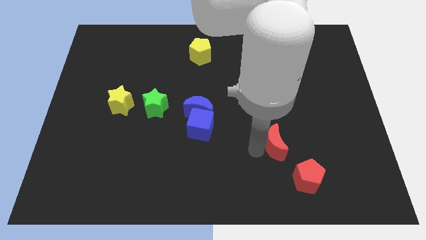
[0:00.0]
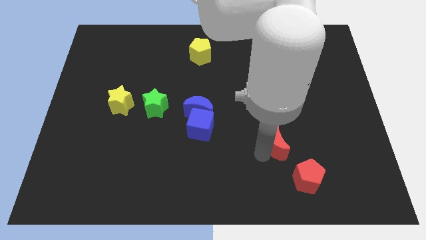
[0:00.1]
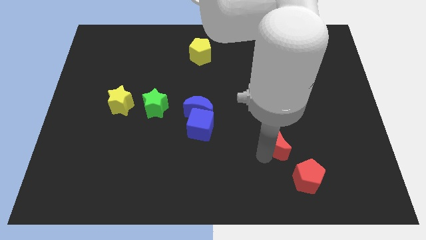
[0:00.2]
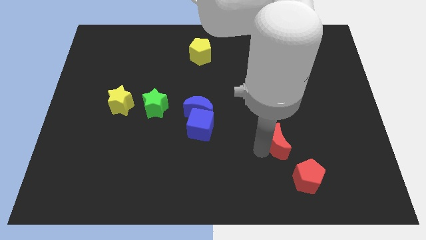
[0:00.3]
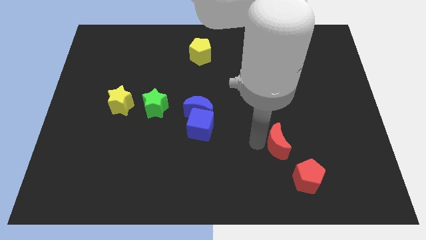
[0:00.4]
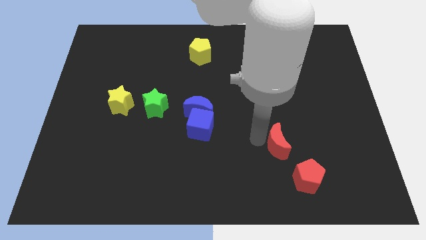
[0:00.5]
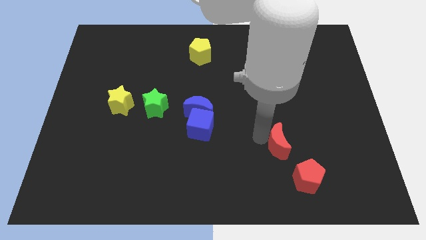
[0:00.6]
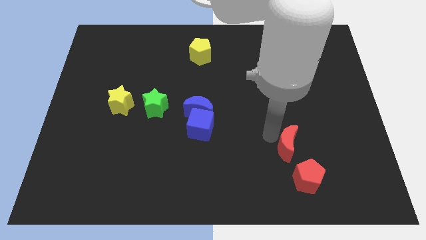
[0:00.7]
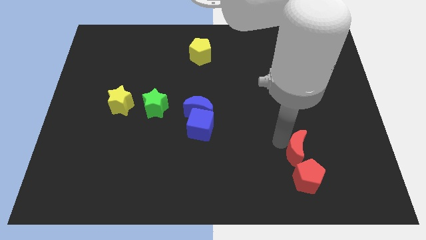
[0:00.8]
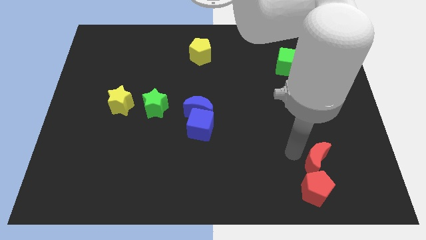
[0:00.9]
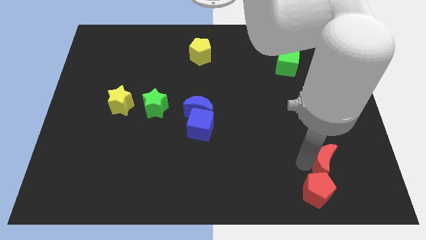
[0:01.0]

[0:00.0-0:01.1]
push the red moon into the top side of the red pentagon

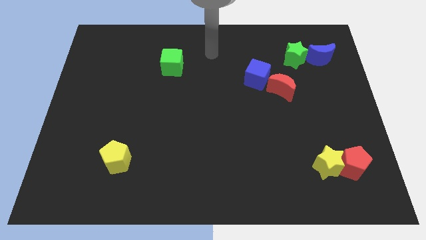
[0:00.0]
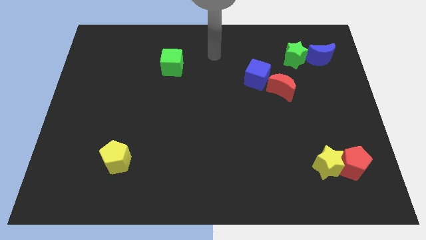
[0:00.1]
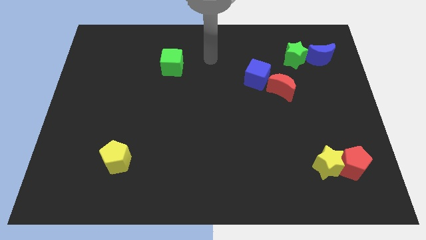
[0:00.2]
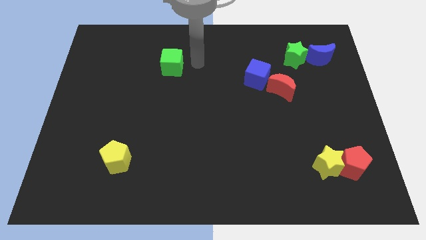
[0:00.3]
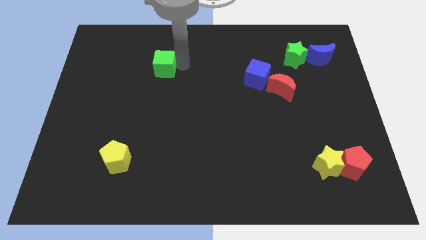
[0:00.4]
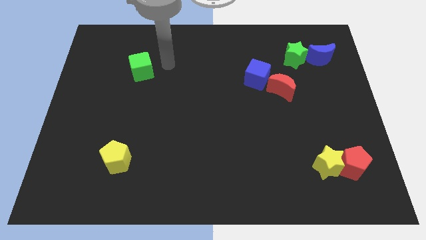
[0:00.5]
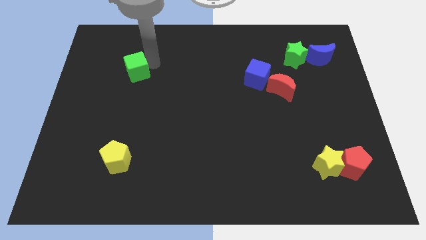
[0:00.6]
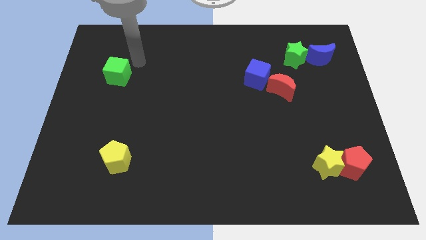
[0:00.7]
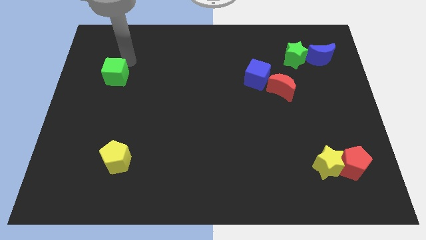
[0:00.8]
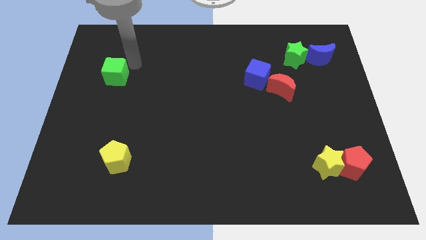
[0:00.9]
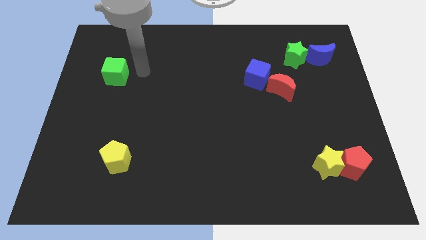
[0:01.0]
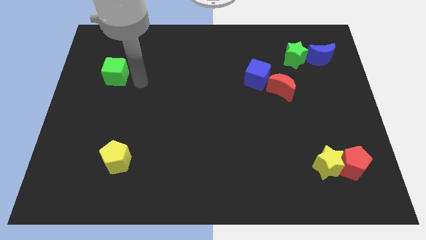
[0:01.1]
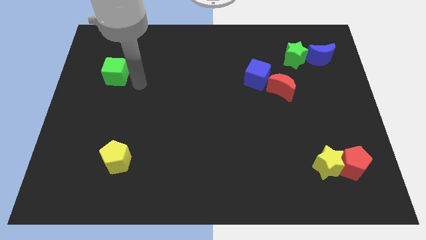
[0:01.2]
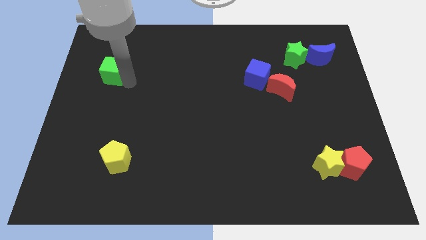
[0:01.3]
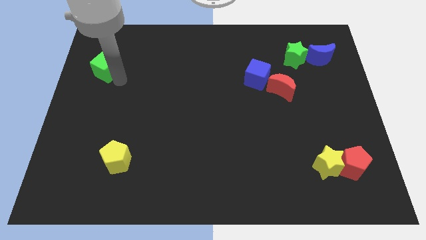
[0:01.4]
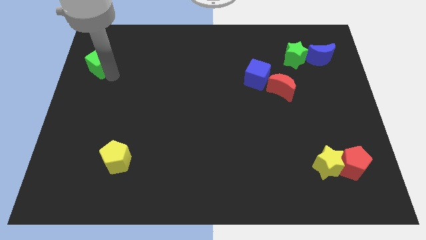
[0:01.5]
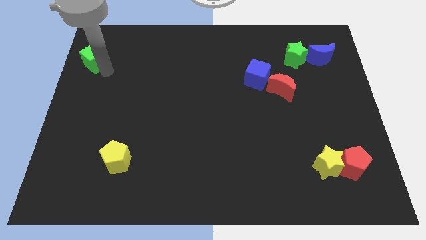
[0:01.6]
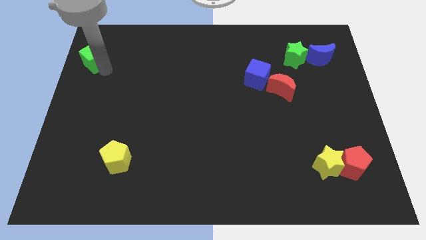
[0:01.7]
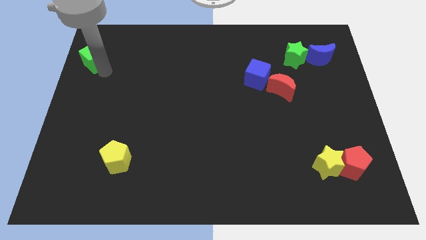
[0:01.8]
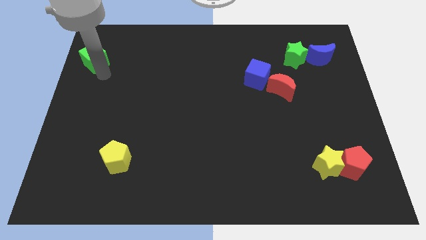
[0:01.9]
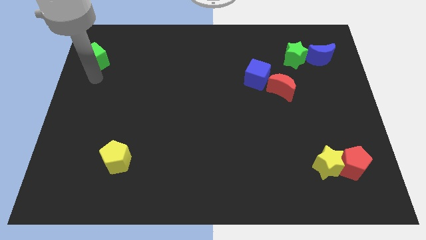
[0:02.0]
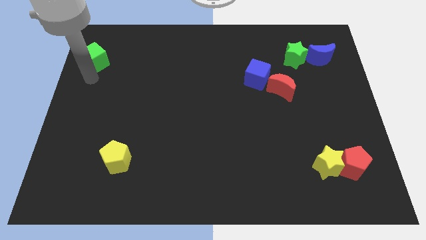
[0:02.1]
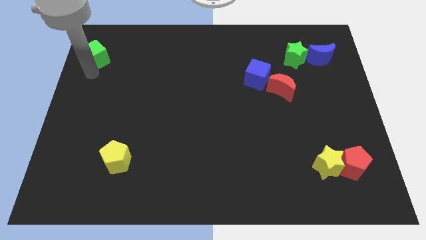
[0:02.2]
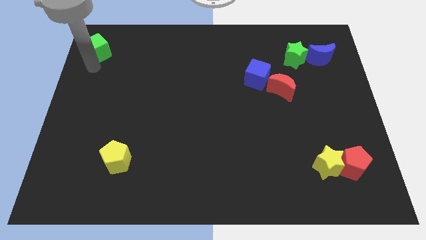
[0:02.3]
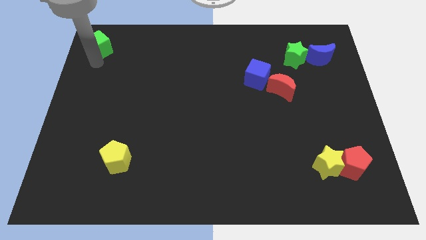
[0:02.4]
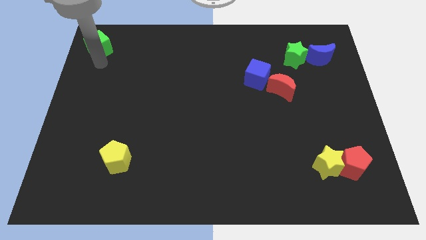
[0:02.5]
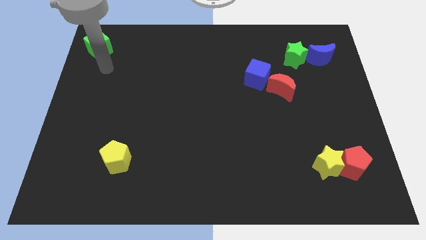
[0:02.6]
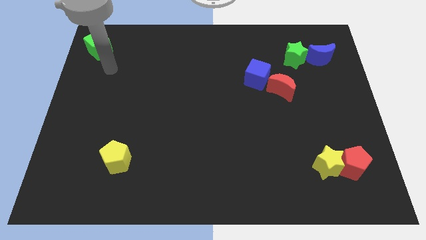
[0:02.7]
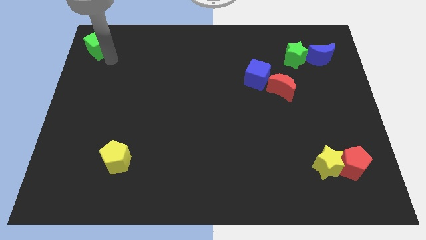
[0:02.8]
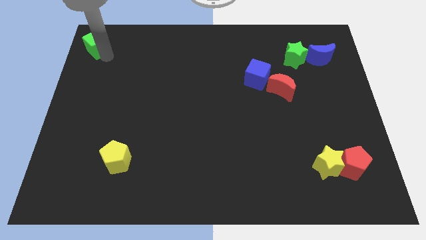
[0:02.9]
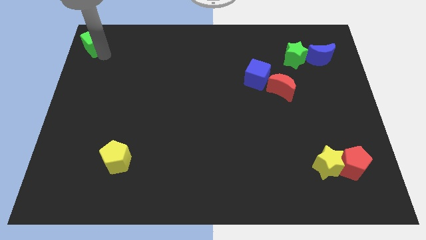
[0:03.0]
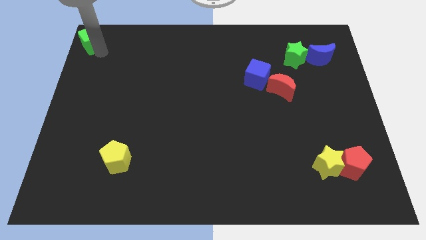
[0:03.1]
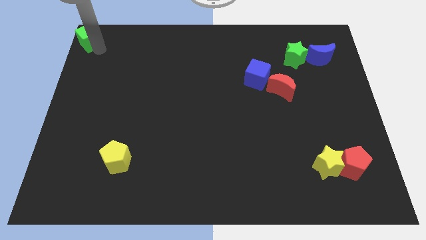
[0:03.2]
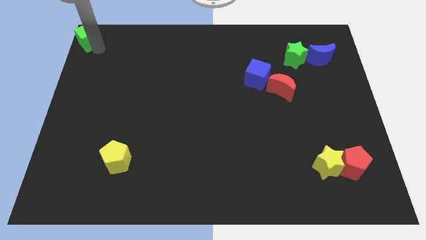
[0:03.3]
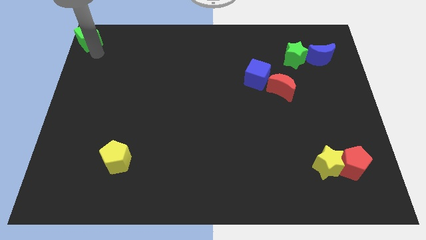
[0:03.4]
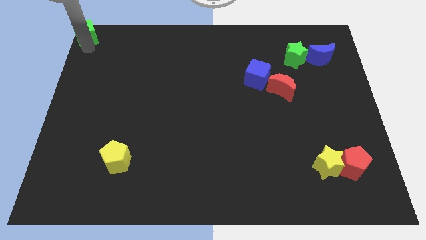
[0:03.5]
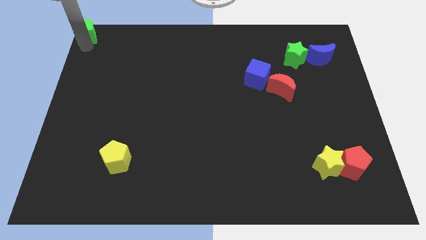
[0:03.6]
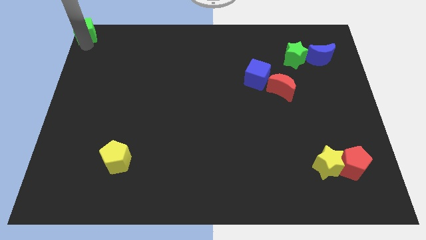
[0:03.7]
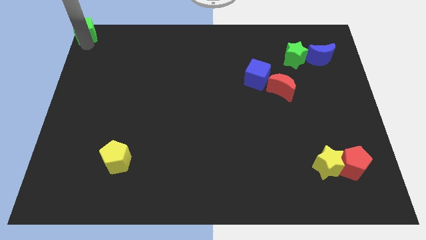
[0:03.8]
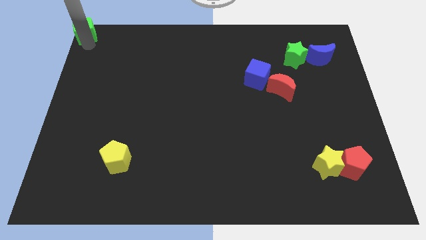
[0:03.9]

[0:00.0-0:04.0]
push green cube to the top left corner

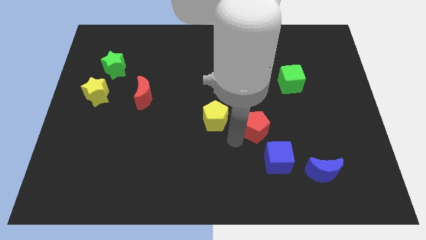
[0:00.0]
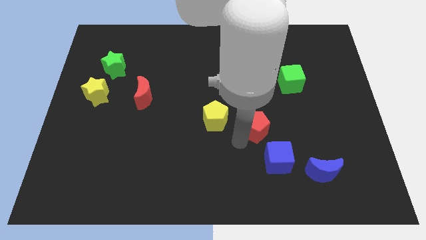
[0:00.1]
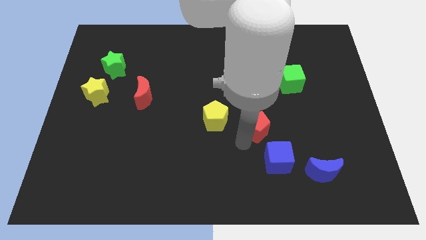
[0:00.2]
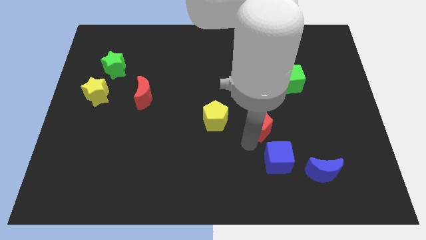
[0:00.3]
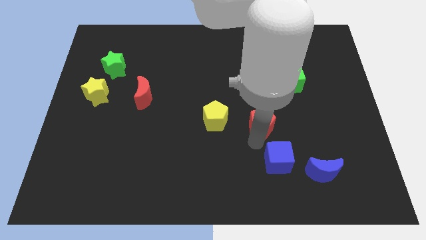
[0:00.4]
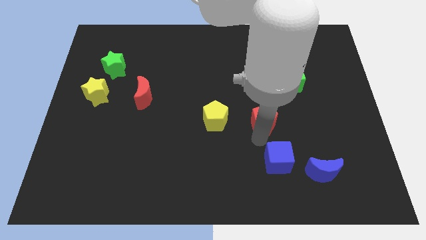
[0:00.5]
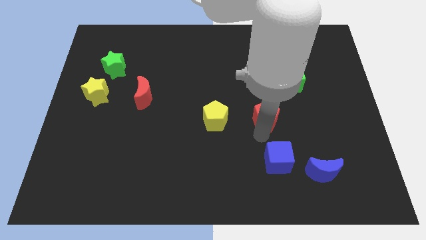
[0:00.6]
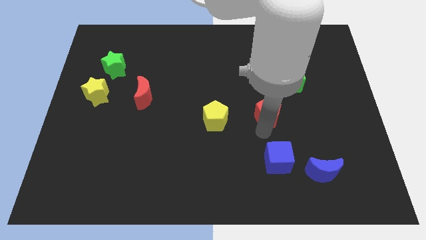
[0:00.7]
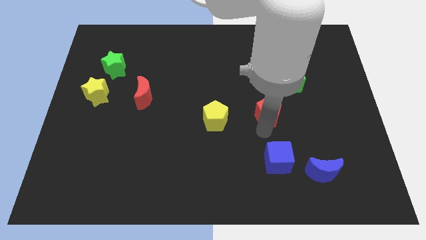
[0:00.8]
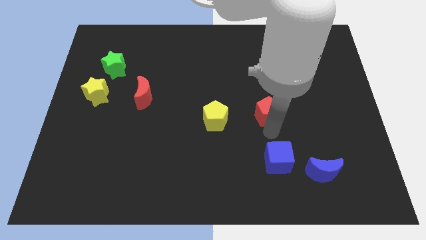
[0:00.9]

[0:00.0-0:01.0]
push red pentagon slightly upwards

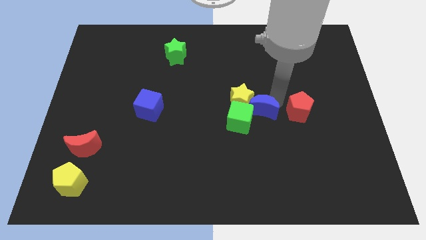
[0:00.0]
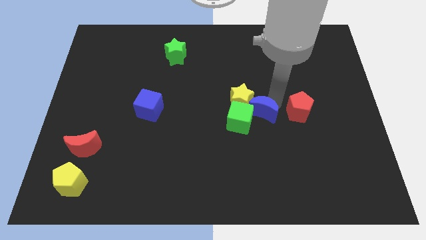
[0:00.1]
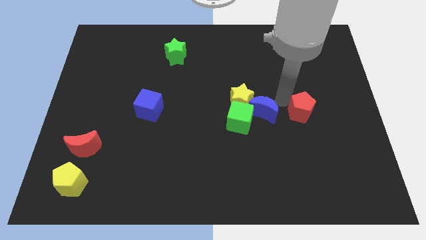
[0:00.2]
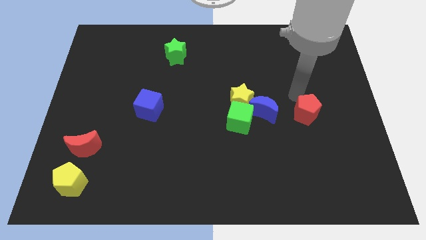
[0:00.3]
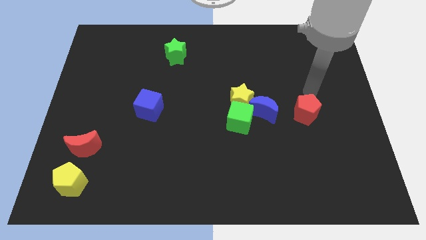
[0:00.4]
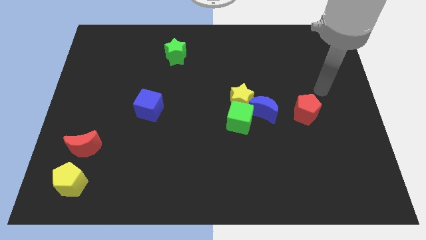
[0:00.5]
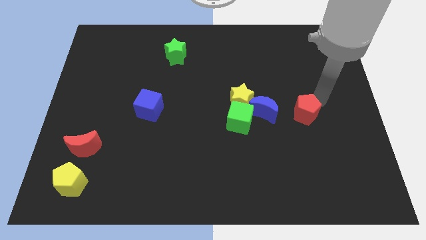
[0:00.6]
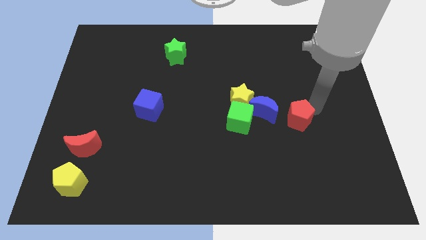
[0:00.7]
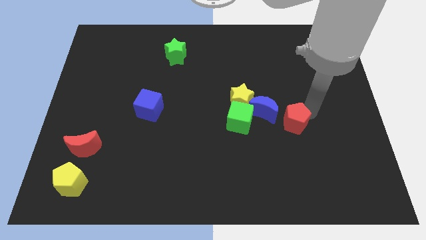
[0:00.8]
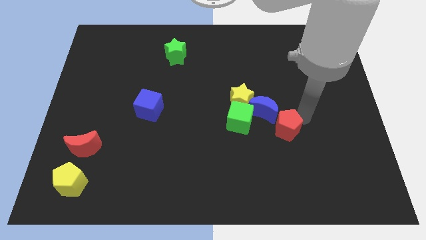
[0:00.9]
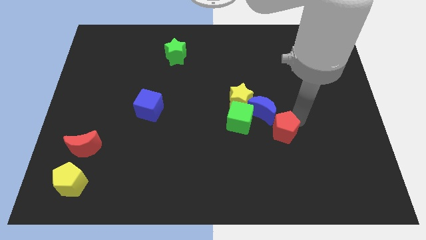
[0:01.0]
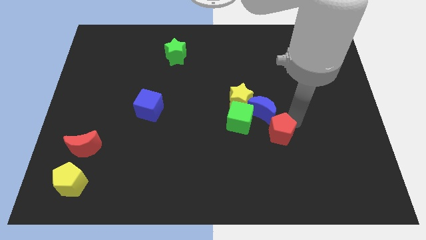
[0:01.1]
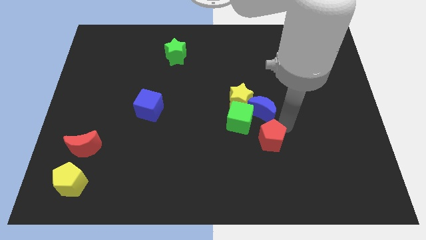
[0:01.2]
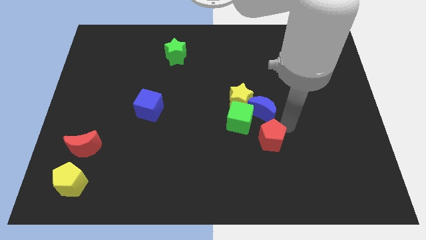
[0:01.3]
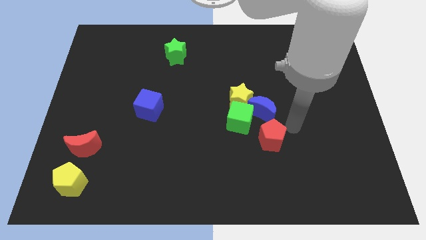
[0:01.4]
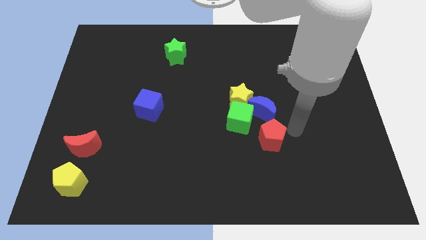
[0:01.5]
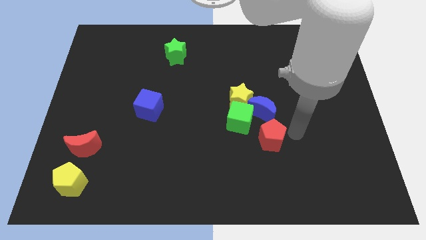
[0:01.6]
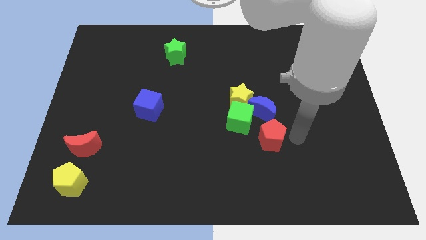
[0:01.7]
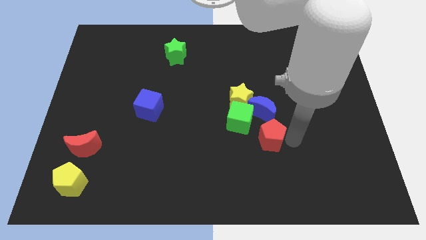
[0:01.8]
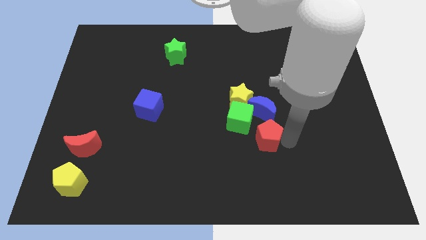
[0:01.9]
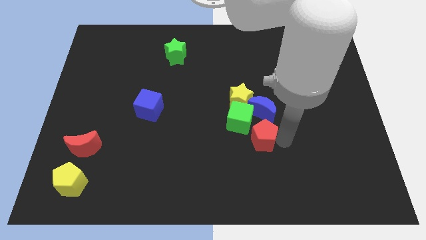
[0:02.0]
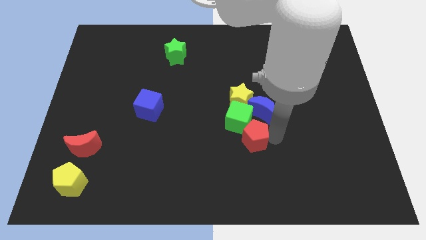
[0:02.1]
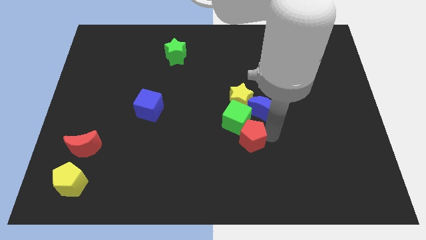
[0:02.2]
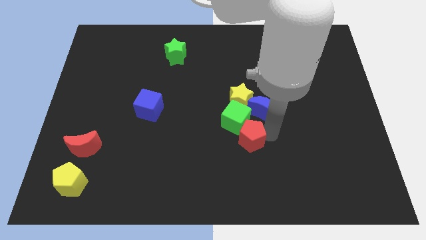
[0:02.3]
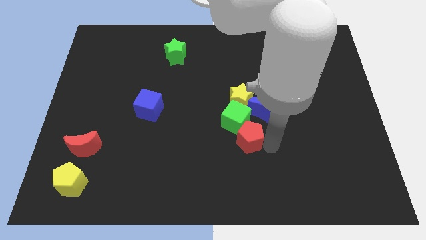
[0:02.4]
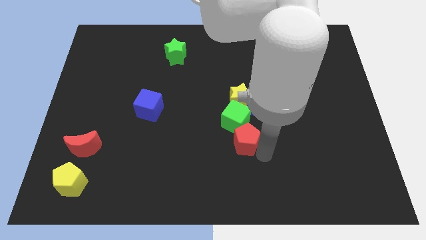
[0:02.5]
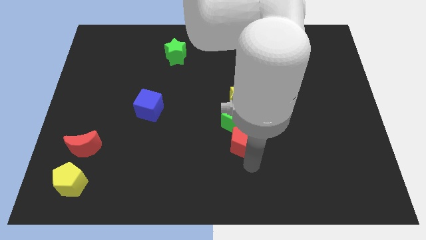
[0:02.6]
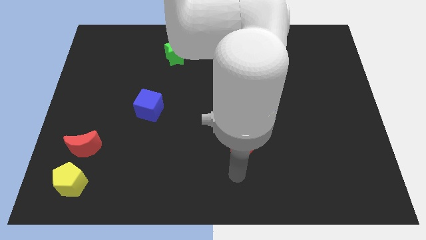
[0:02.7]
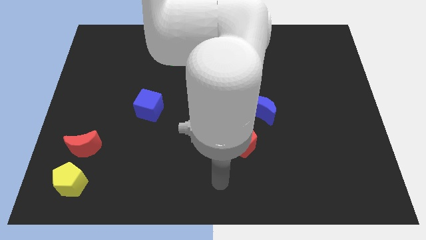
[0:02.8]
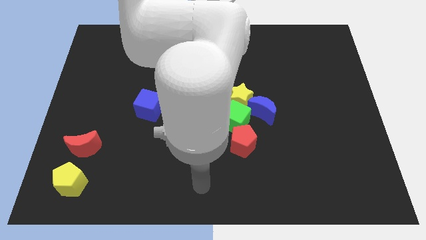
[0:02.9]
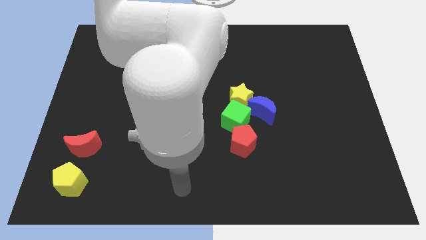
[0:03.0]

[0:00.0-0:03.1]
push the red pentagon into green cube
